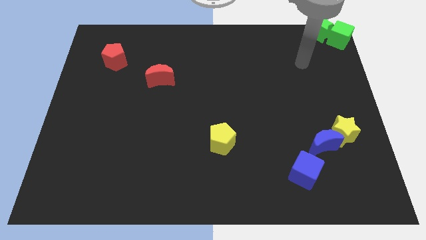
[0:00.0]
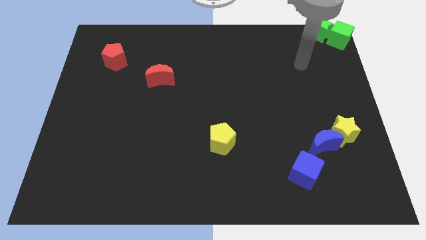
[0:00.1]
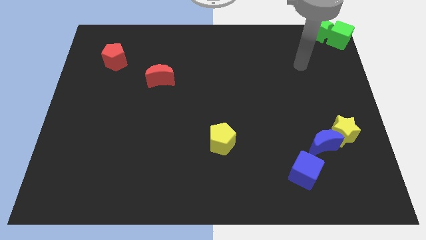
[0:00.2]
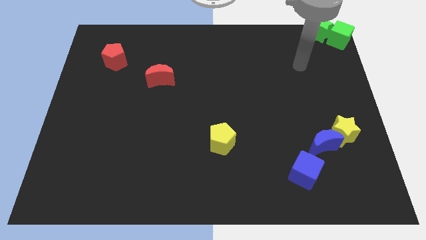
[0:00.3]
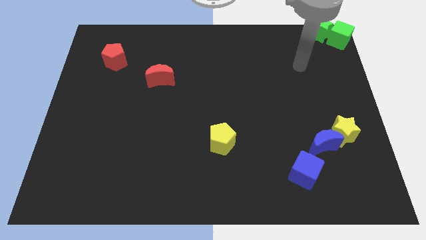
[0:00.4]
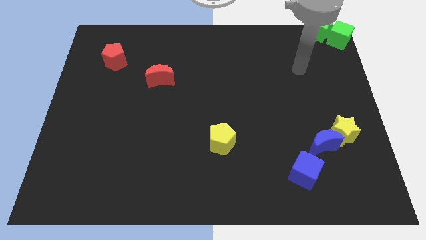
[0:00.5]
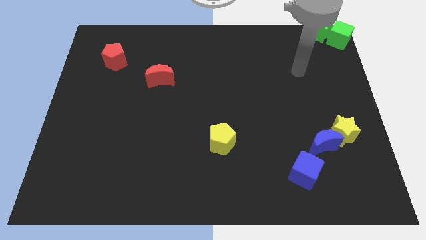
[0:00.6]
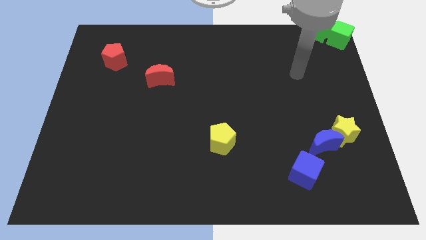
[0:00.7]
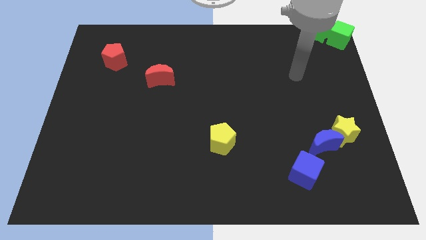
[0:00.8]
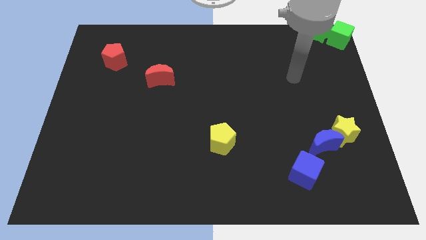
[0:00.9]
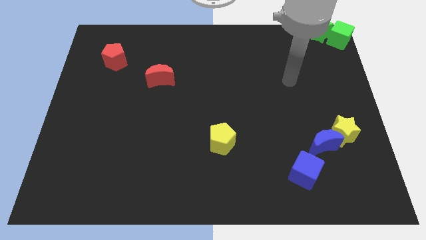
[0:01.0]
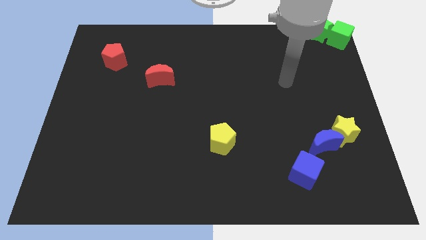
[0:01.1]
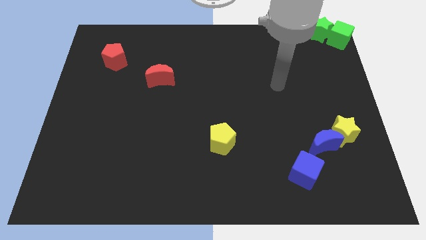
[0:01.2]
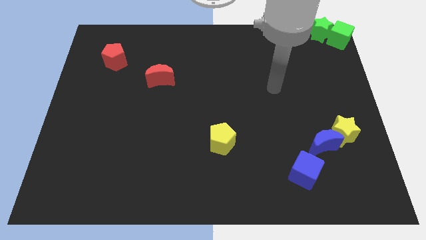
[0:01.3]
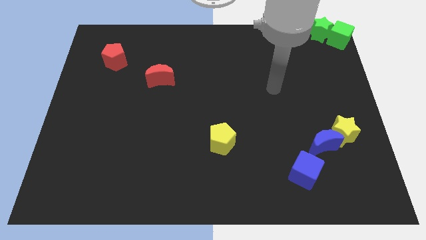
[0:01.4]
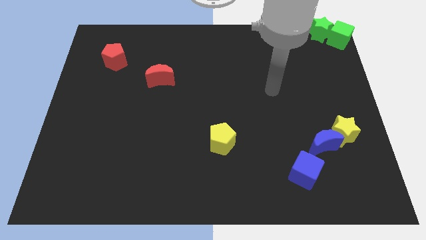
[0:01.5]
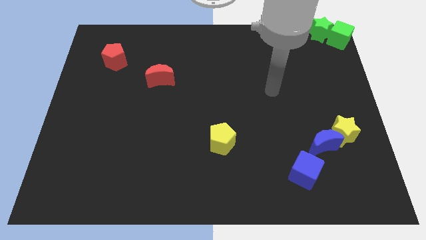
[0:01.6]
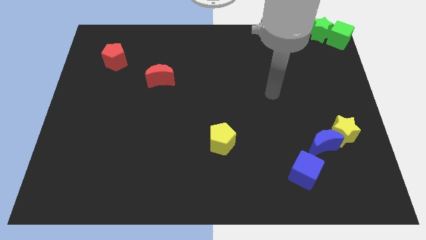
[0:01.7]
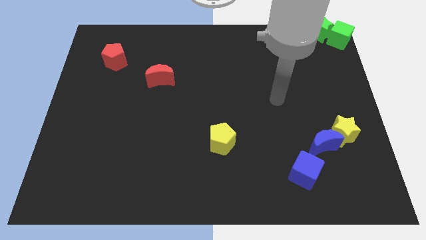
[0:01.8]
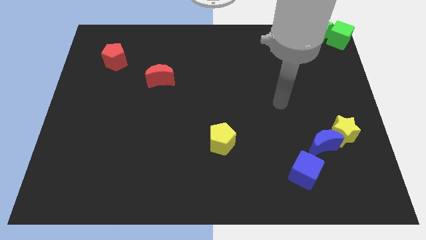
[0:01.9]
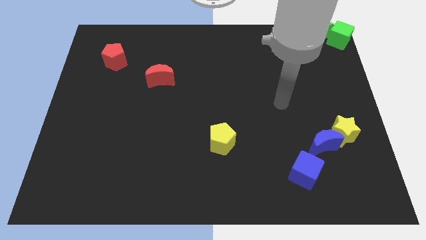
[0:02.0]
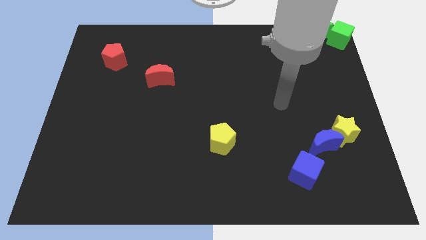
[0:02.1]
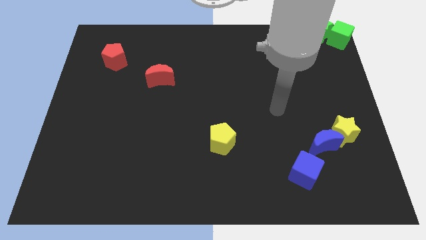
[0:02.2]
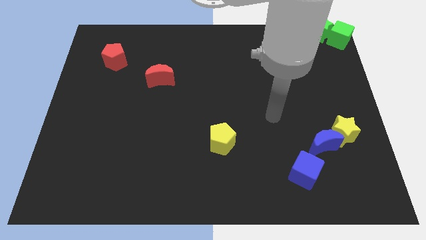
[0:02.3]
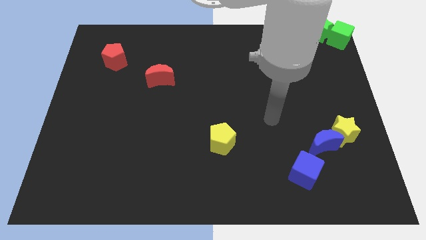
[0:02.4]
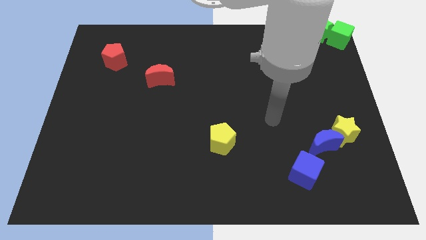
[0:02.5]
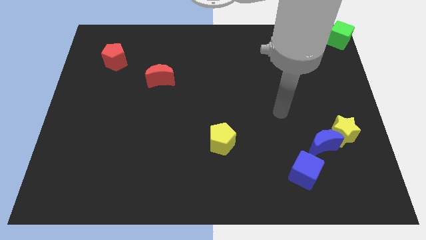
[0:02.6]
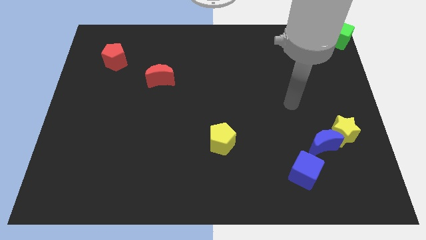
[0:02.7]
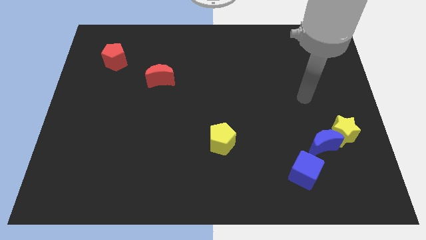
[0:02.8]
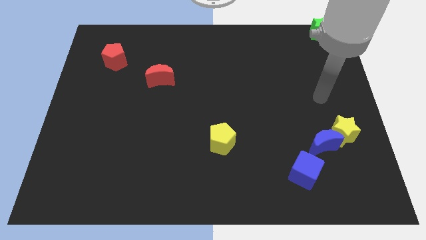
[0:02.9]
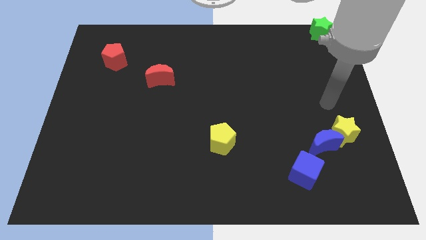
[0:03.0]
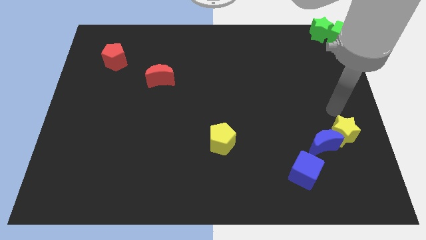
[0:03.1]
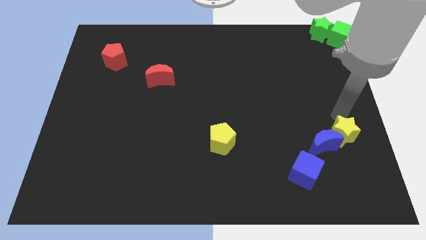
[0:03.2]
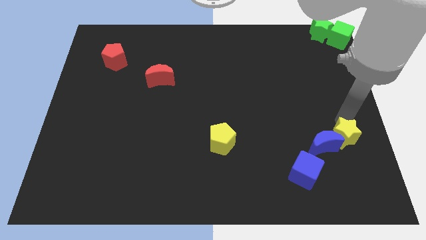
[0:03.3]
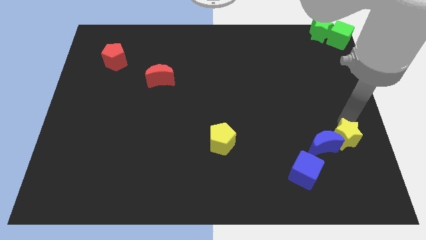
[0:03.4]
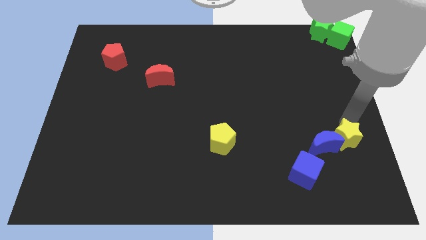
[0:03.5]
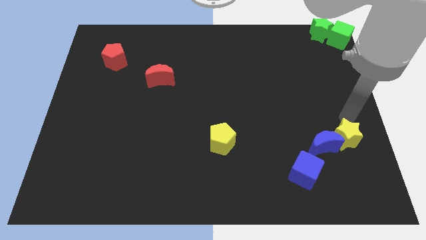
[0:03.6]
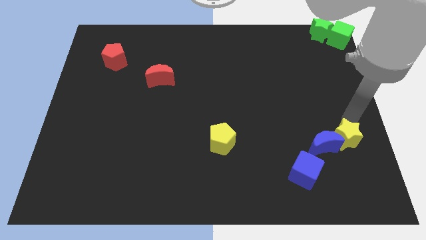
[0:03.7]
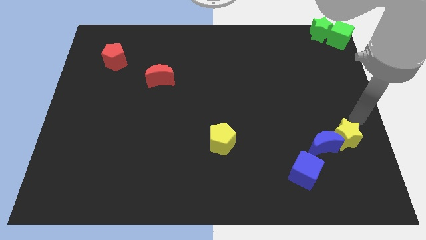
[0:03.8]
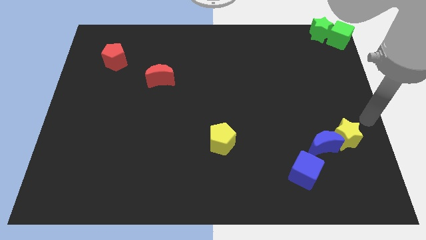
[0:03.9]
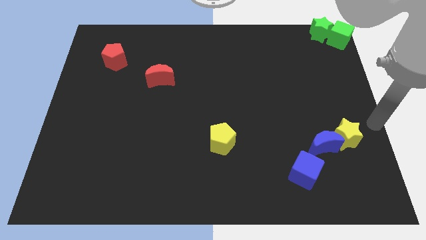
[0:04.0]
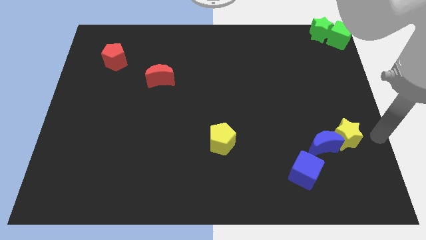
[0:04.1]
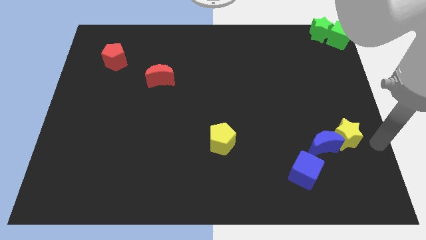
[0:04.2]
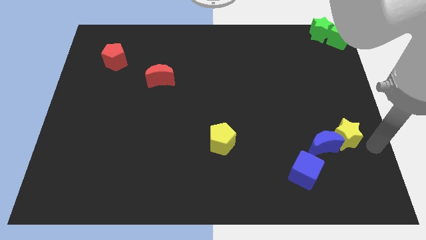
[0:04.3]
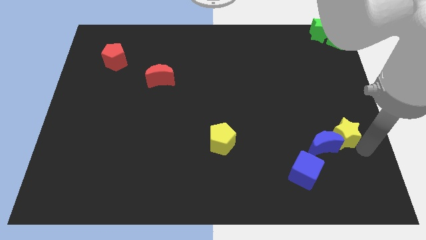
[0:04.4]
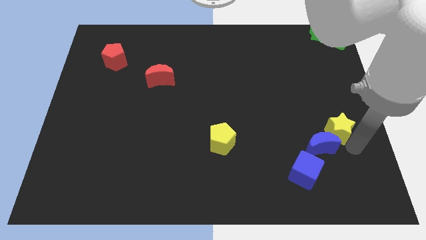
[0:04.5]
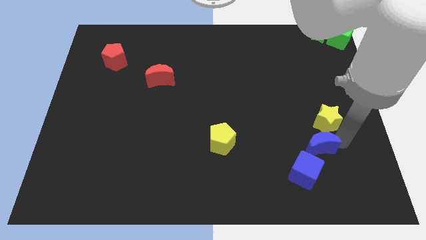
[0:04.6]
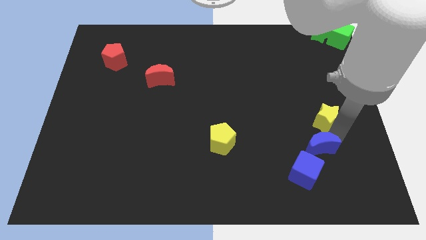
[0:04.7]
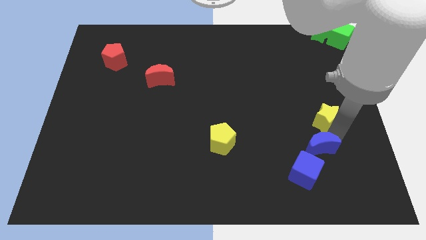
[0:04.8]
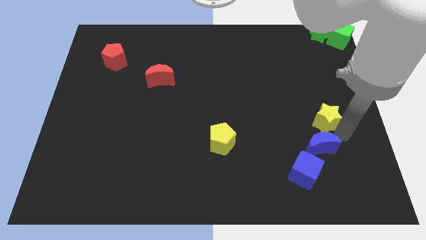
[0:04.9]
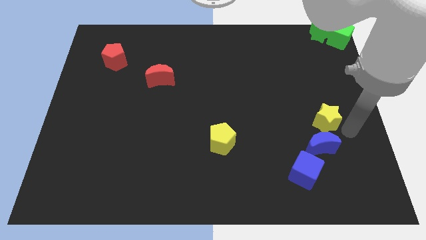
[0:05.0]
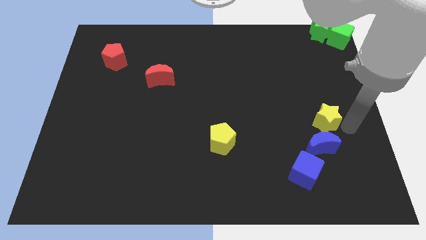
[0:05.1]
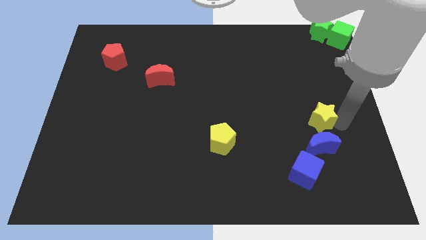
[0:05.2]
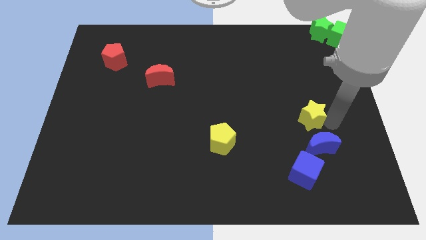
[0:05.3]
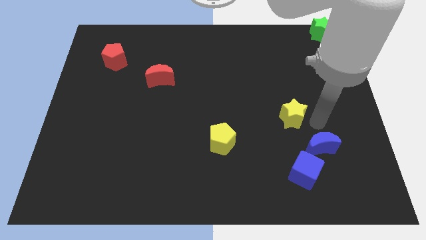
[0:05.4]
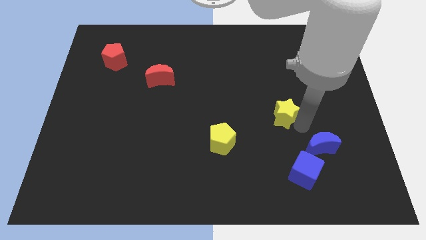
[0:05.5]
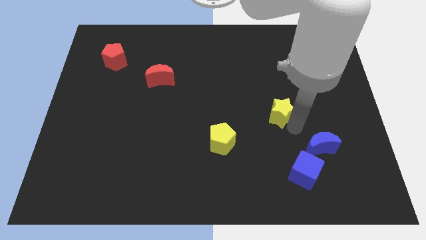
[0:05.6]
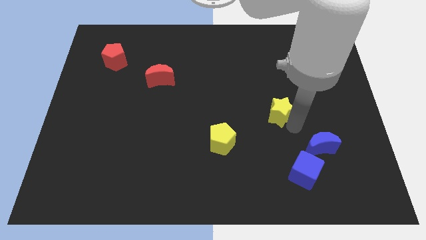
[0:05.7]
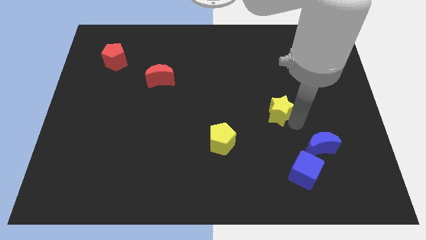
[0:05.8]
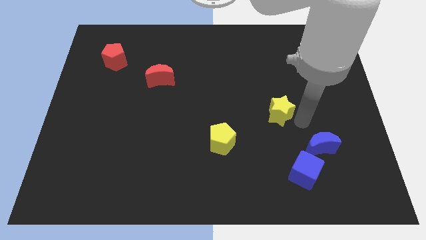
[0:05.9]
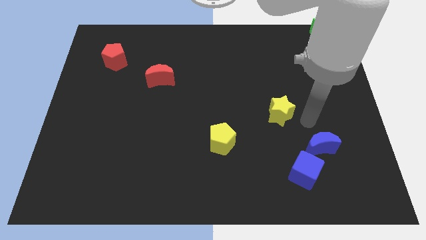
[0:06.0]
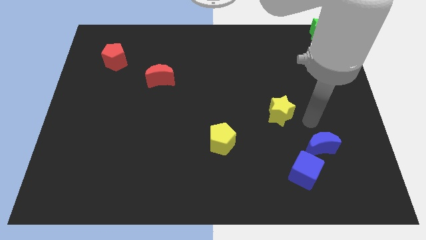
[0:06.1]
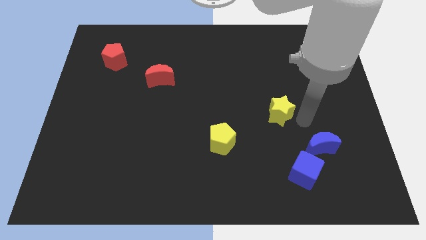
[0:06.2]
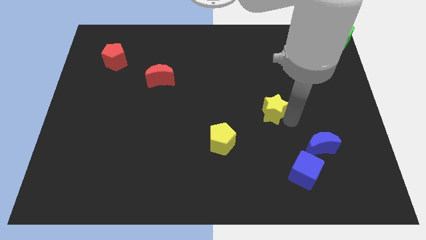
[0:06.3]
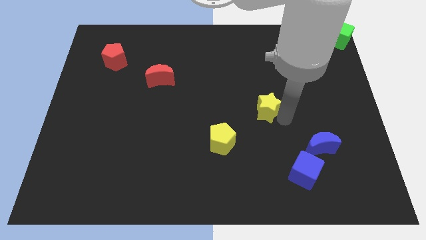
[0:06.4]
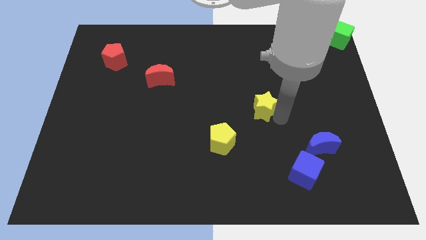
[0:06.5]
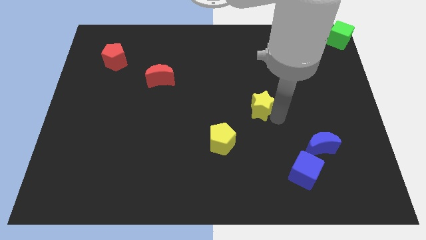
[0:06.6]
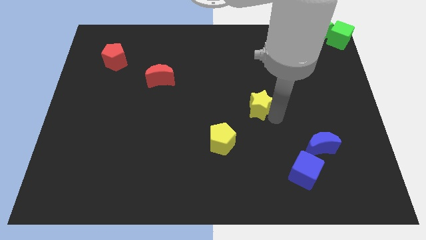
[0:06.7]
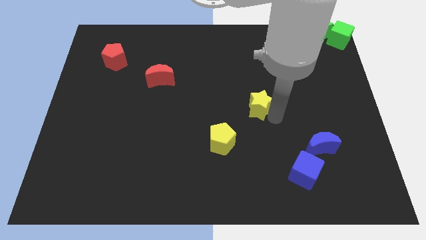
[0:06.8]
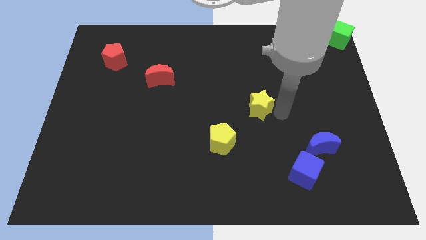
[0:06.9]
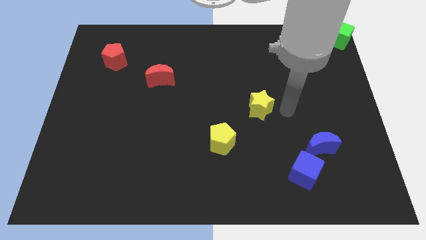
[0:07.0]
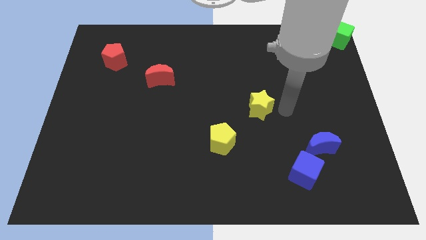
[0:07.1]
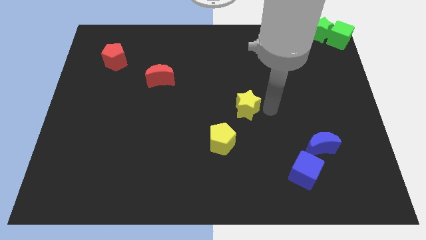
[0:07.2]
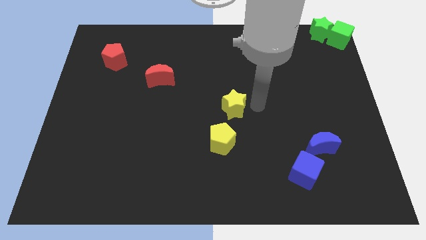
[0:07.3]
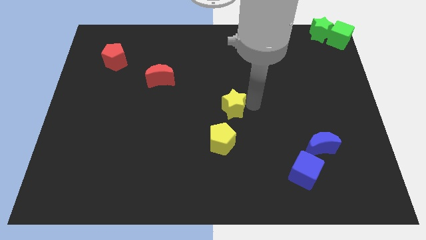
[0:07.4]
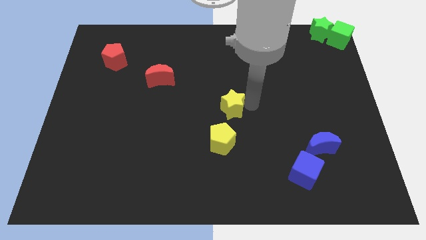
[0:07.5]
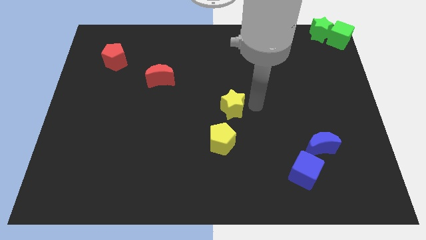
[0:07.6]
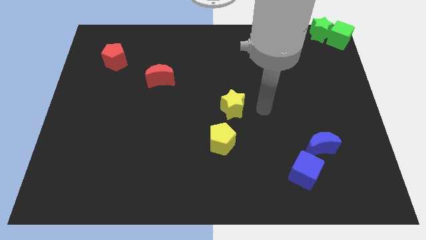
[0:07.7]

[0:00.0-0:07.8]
separate the yellow star from the blue moon

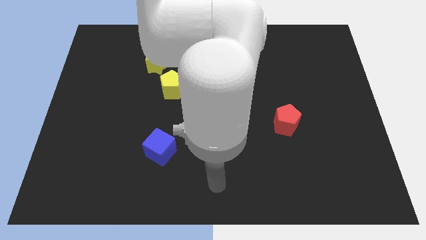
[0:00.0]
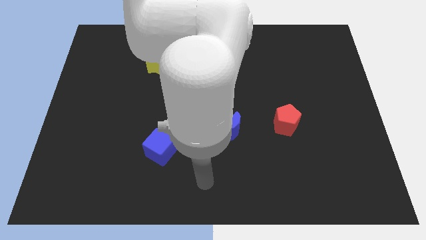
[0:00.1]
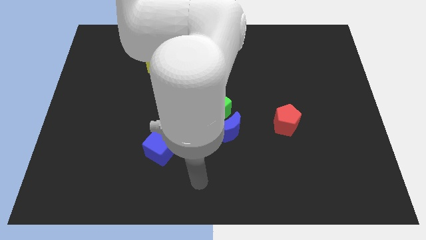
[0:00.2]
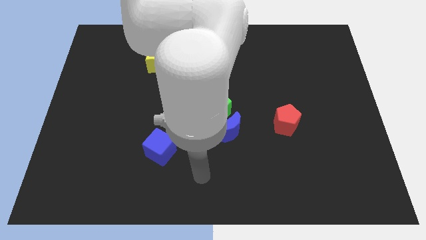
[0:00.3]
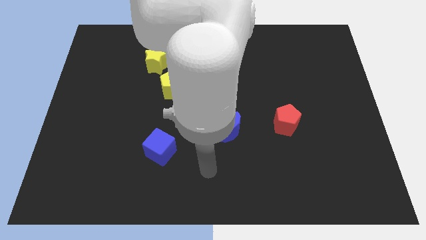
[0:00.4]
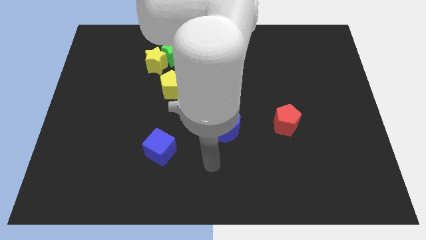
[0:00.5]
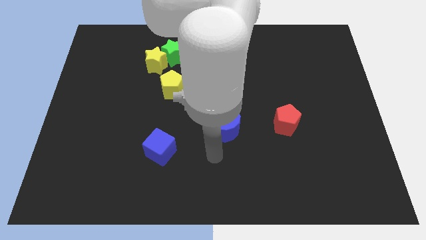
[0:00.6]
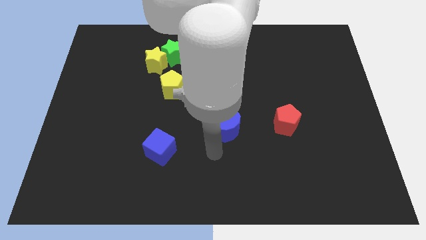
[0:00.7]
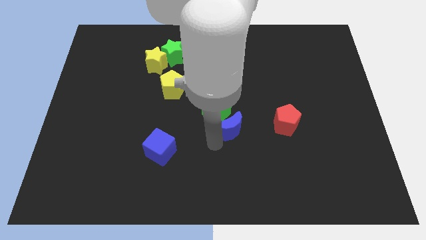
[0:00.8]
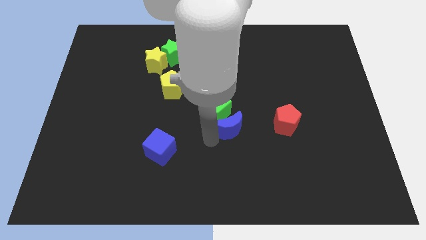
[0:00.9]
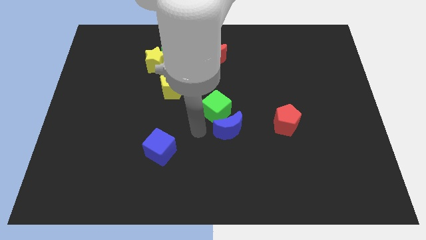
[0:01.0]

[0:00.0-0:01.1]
move blue moon below the green cube

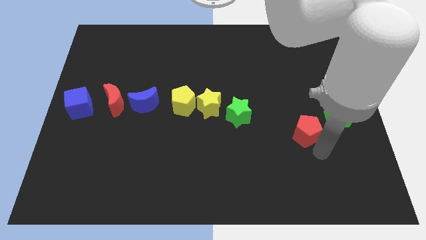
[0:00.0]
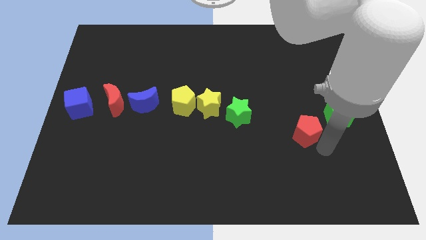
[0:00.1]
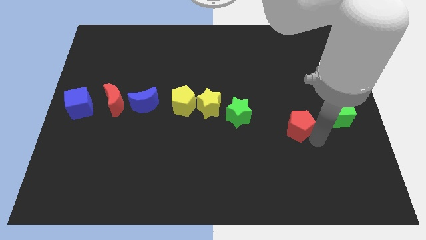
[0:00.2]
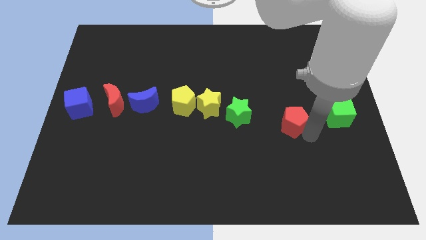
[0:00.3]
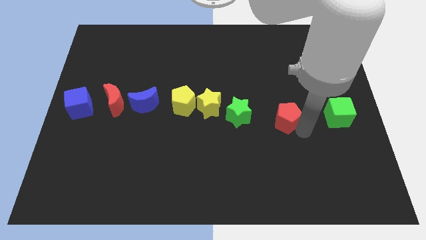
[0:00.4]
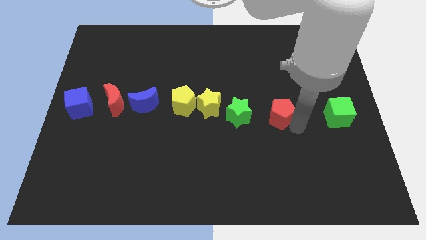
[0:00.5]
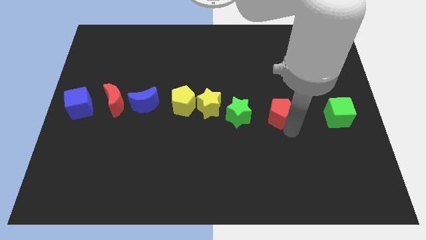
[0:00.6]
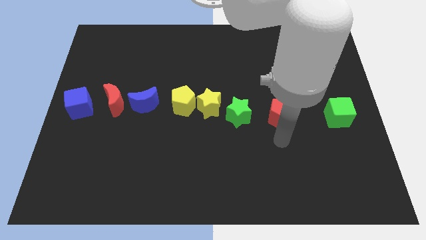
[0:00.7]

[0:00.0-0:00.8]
push the red pentagon right to the green star
